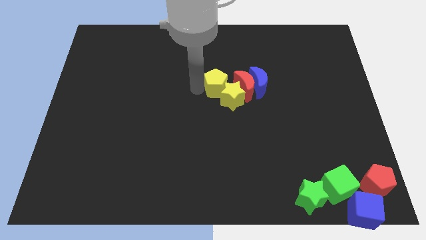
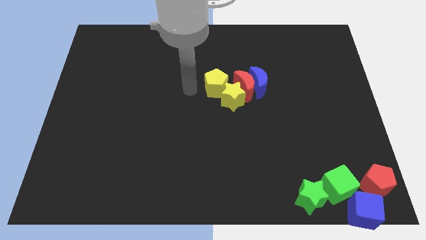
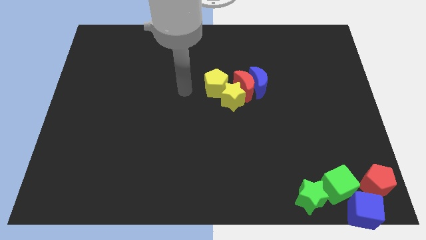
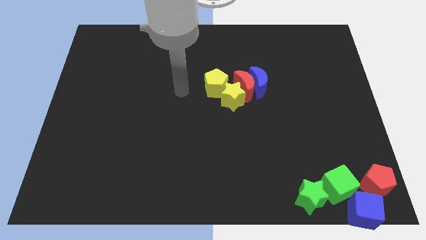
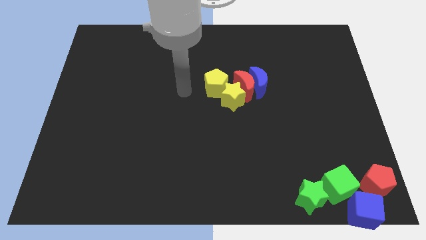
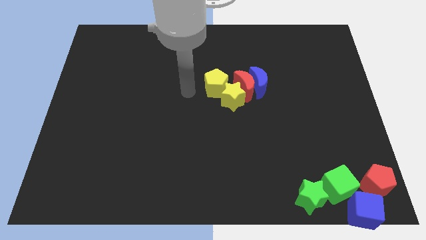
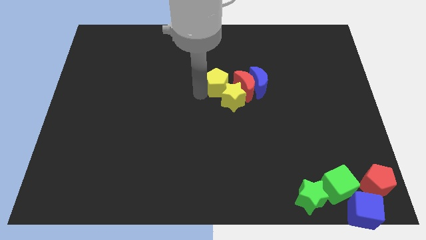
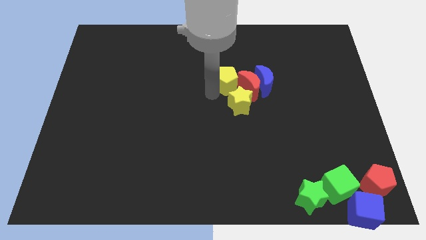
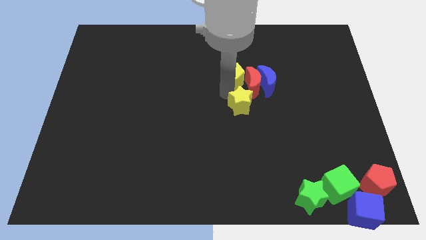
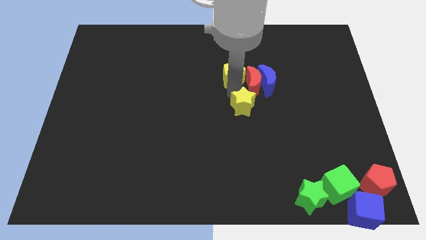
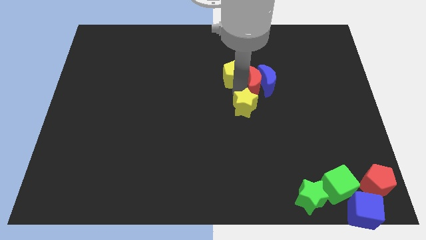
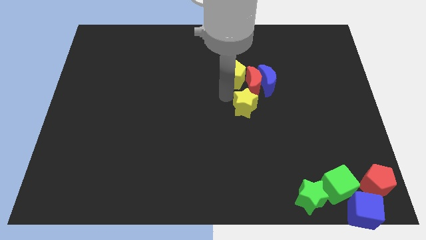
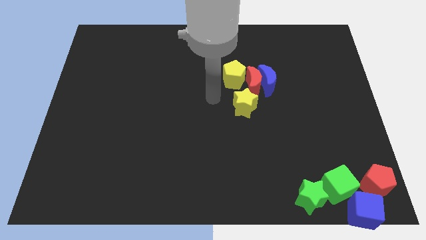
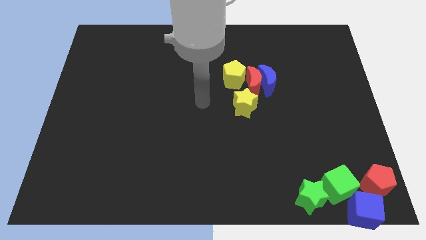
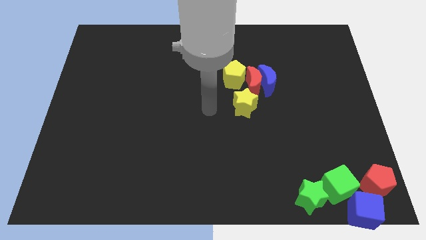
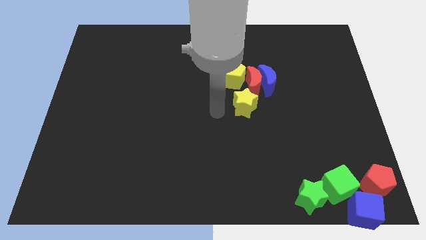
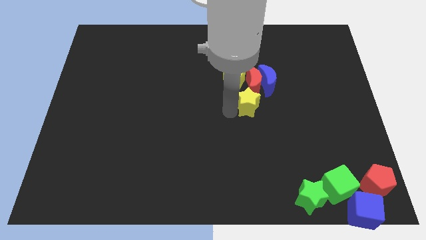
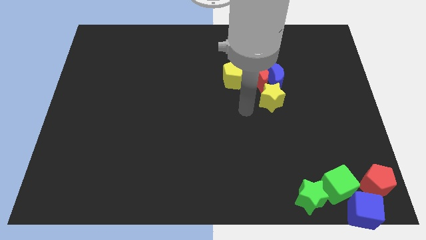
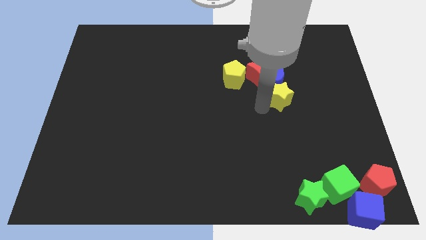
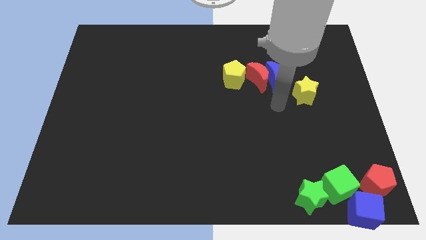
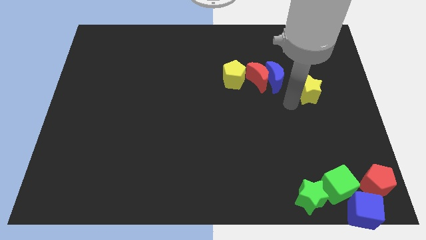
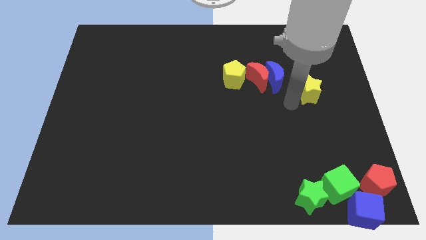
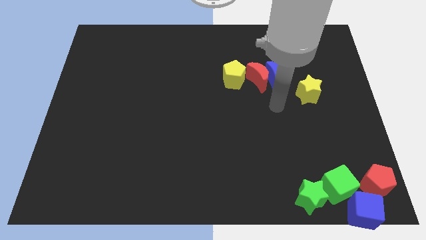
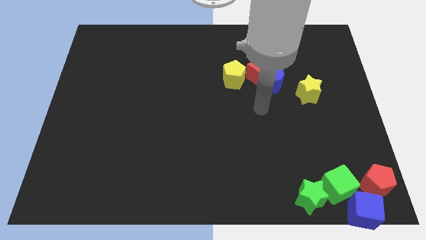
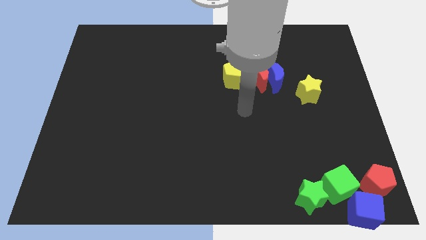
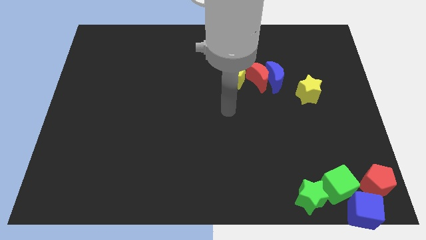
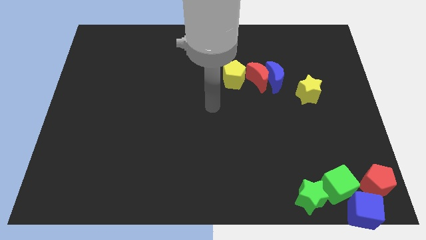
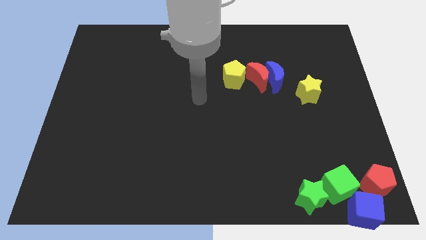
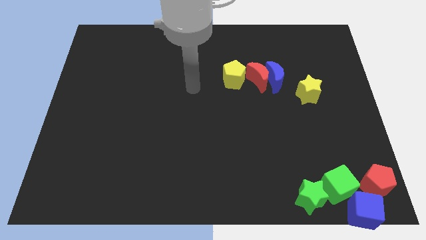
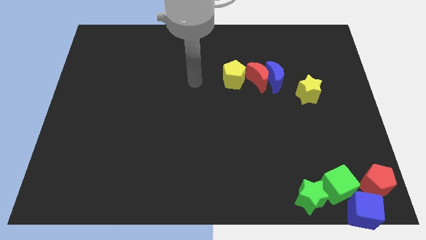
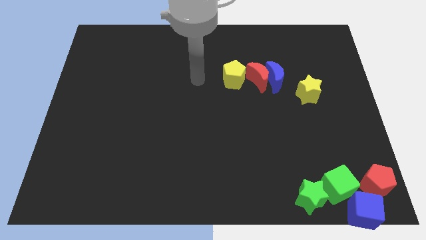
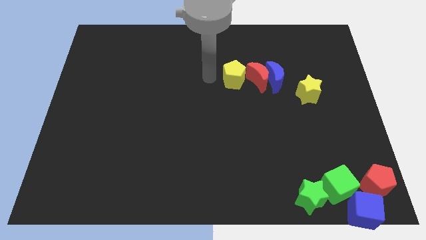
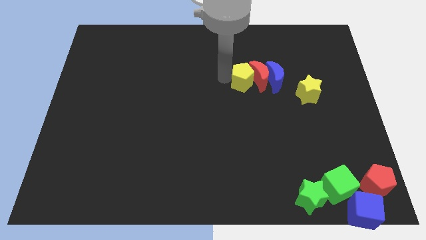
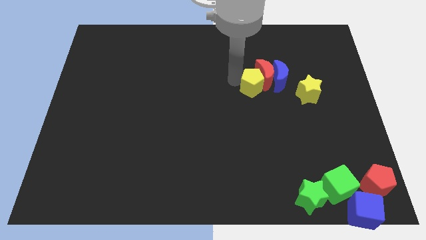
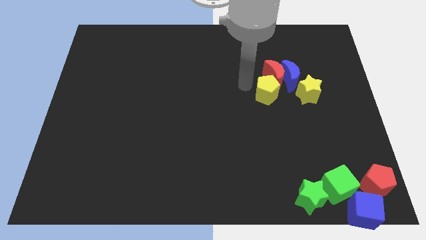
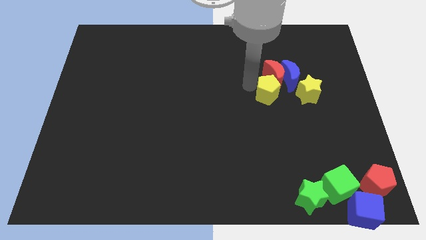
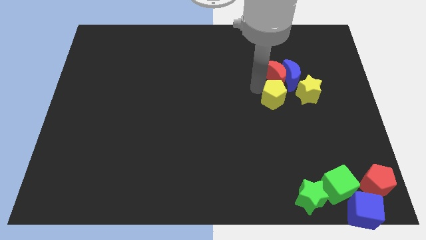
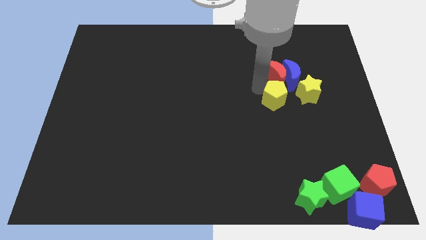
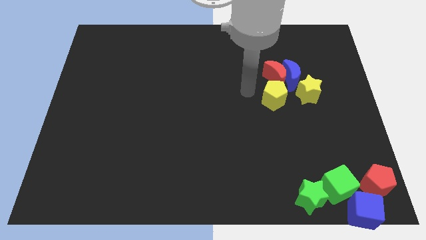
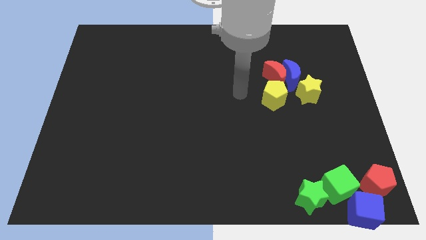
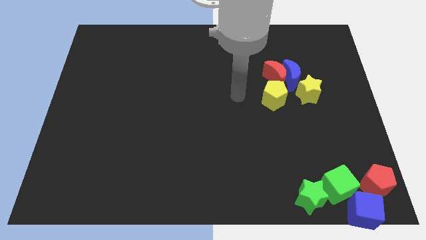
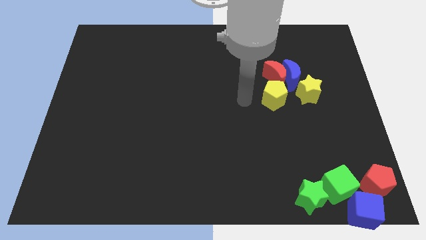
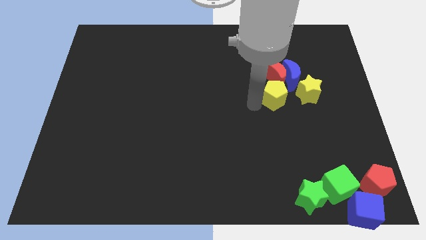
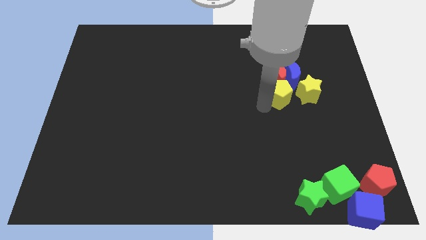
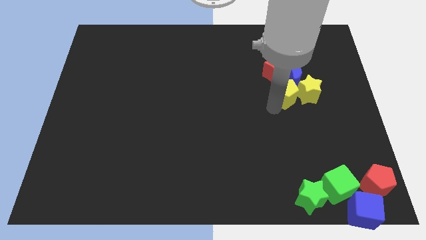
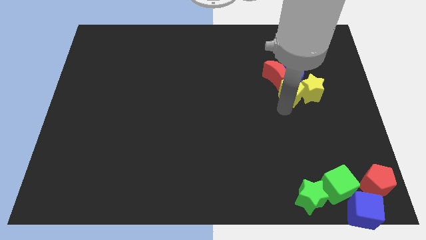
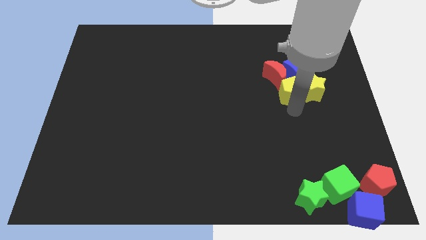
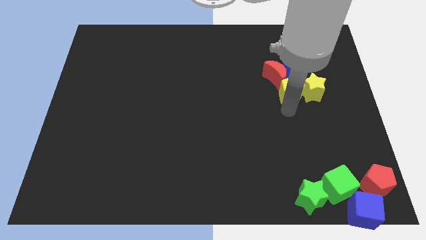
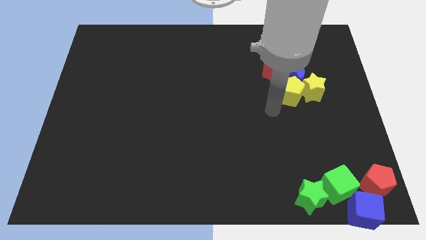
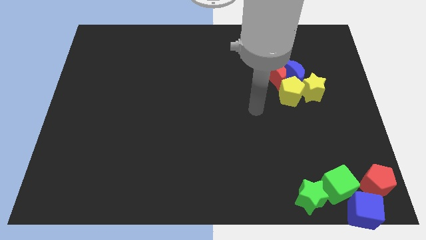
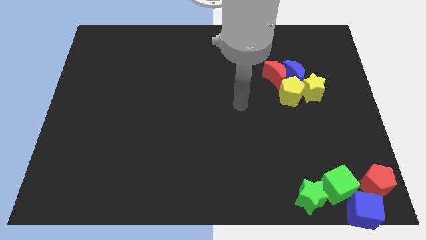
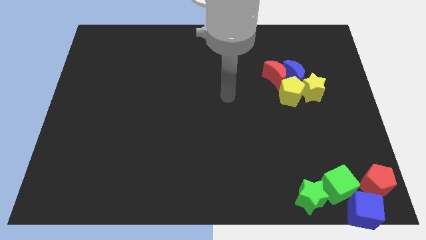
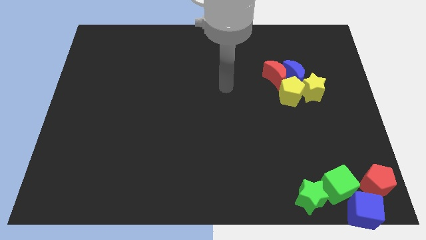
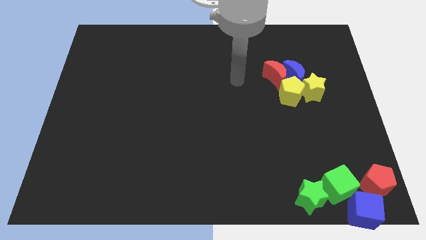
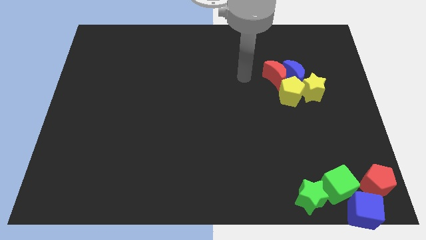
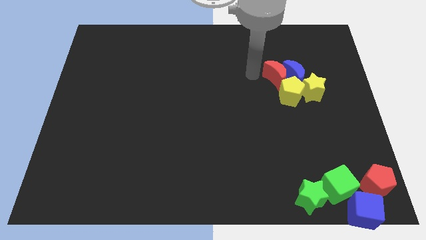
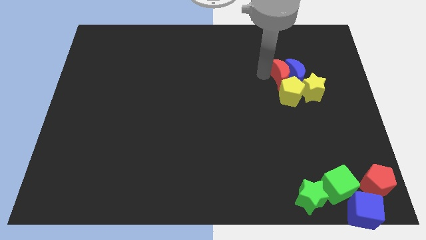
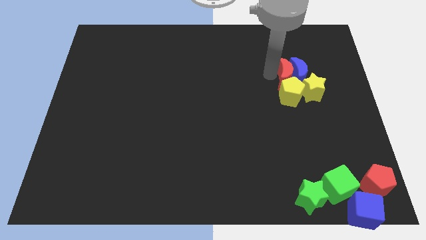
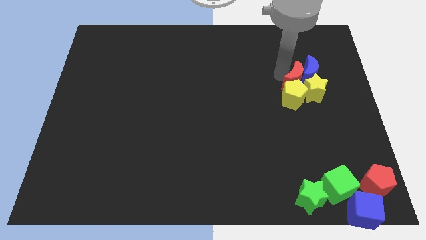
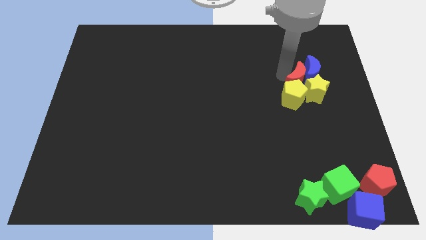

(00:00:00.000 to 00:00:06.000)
move the yellow blocks red crescent and blue crescent above the top side of the group of blocks

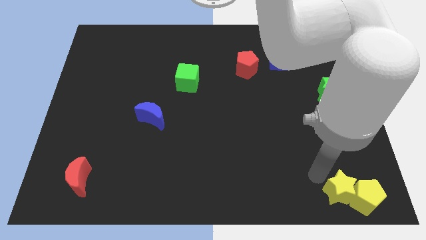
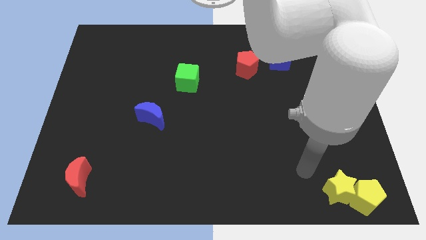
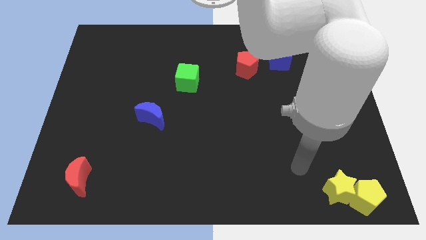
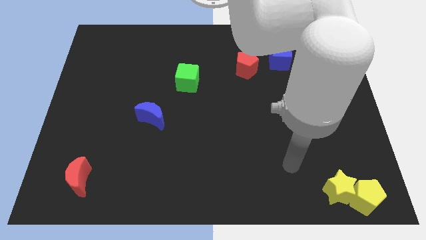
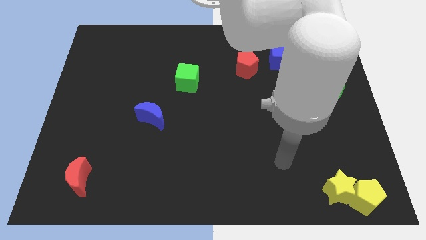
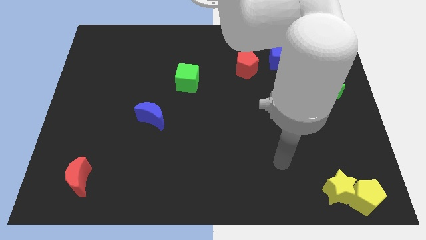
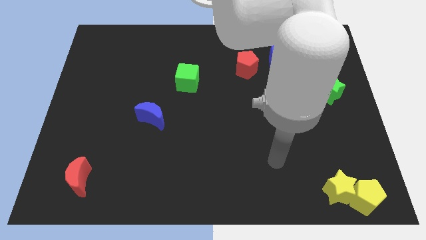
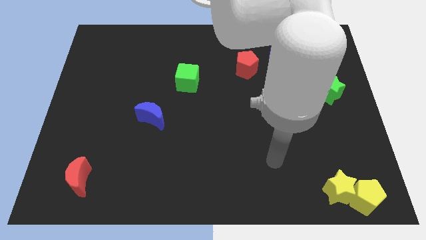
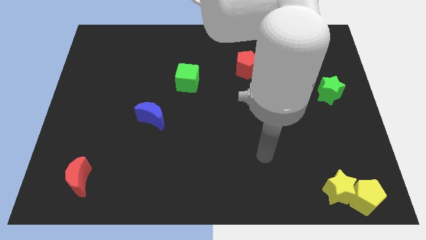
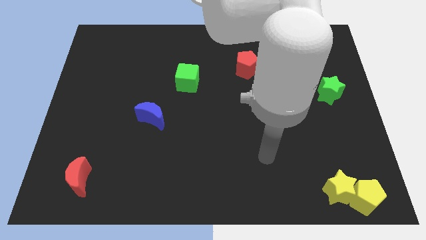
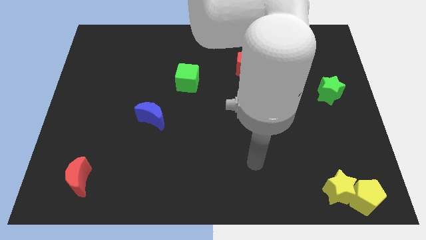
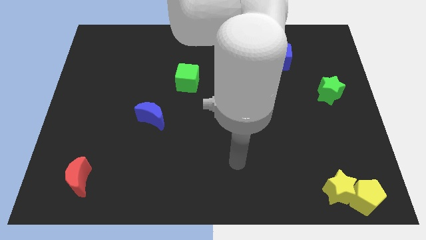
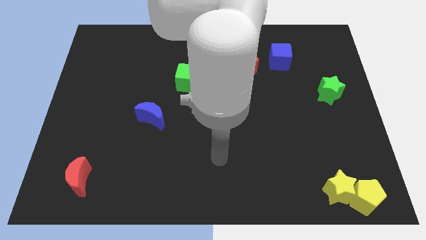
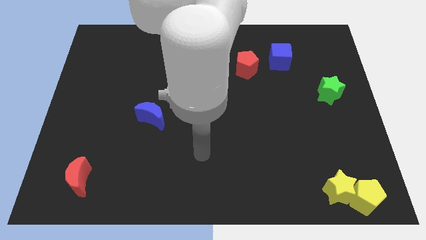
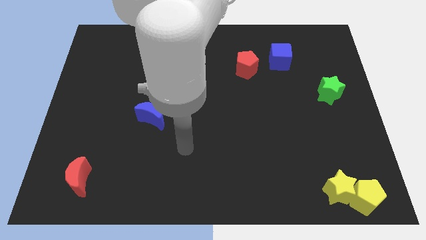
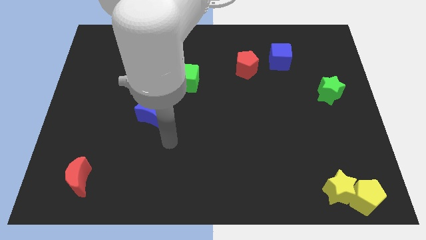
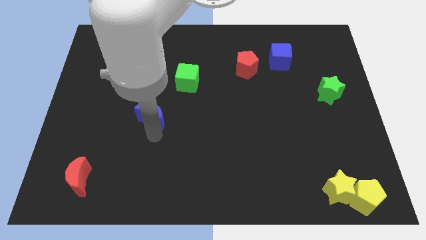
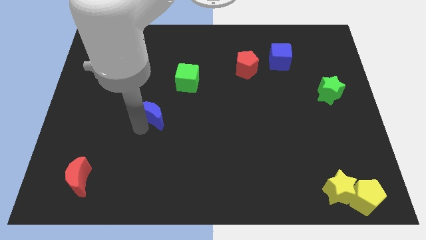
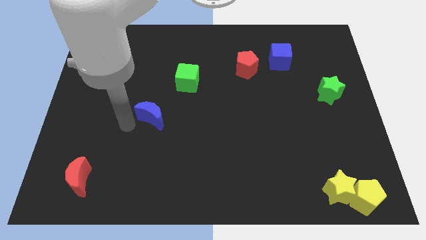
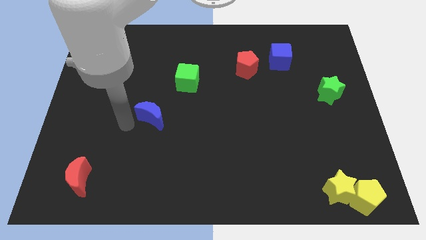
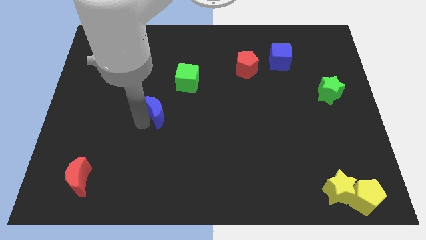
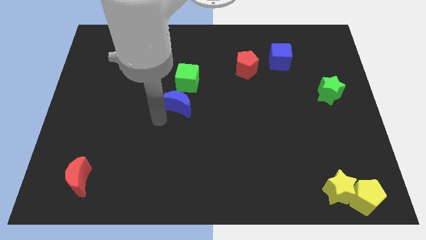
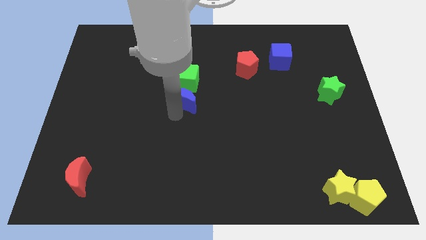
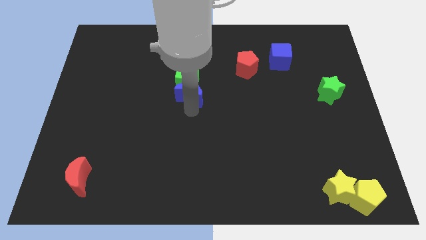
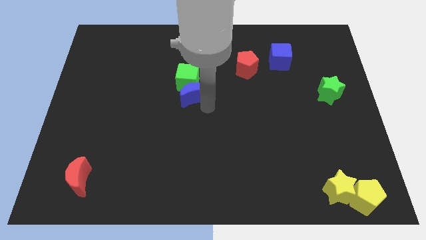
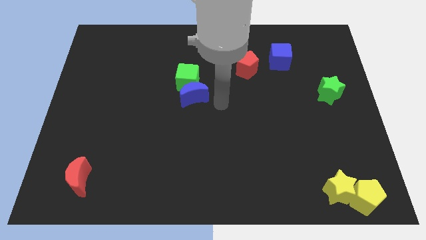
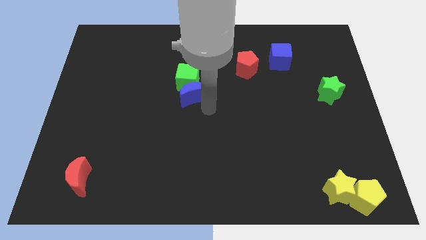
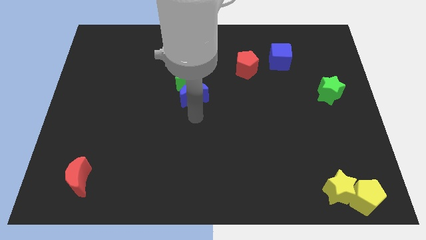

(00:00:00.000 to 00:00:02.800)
push the blue moon into the green cube

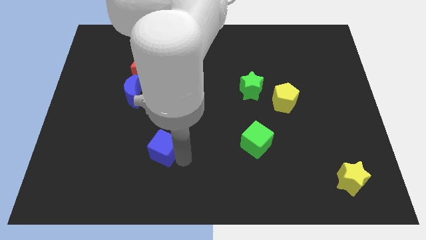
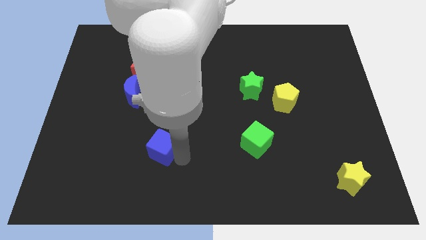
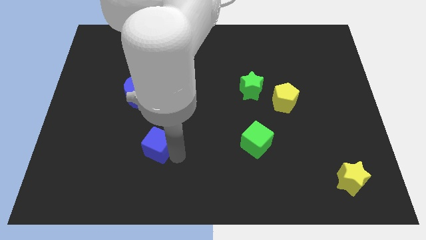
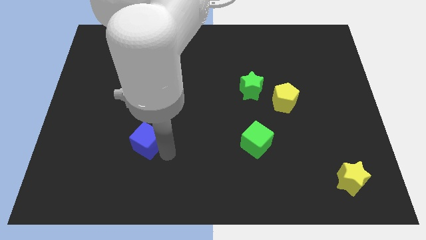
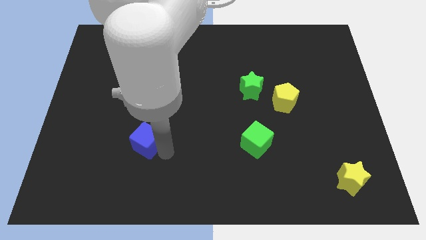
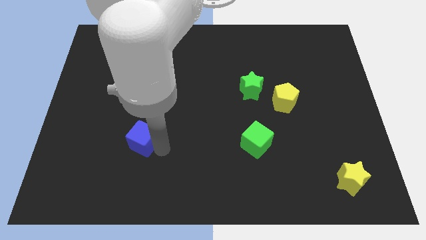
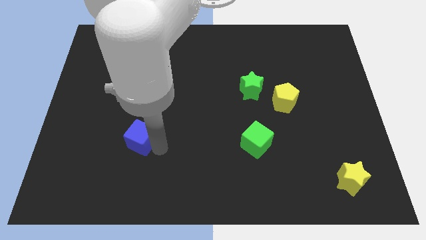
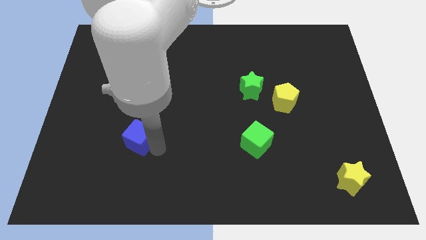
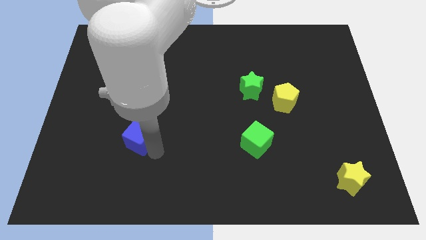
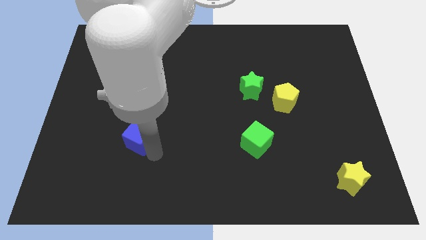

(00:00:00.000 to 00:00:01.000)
push the blue cube towards left side of the board
